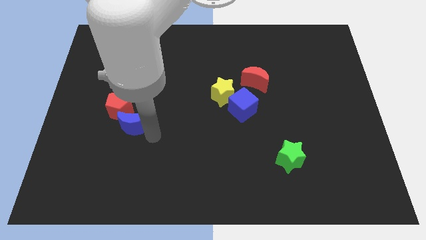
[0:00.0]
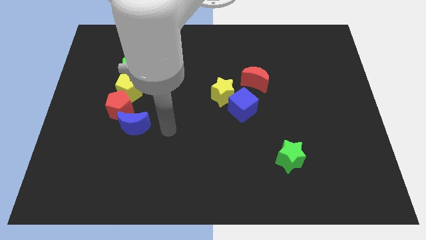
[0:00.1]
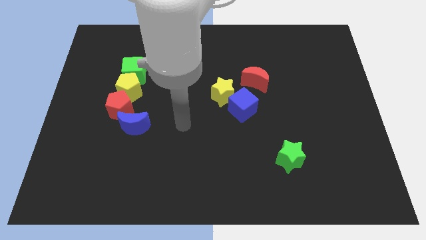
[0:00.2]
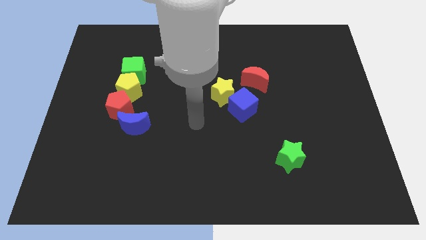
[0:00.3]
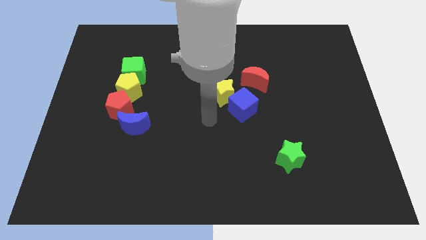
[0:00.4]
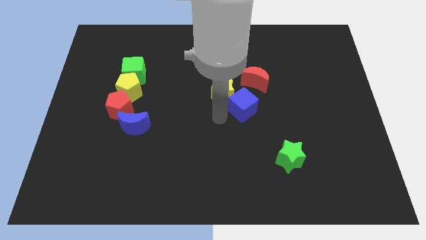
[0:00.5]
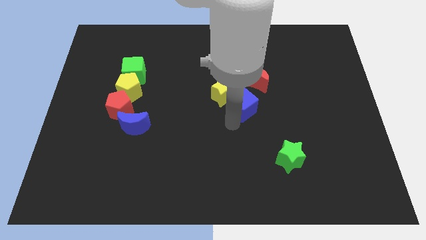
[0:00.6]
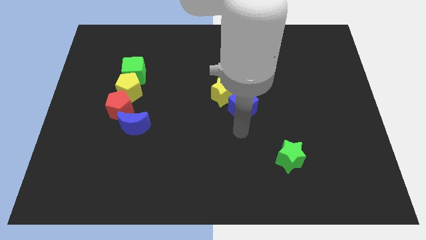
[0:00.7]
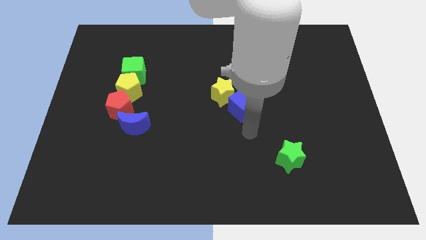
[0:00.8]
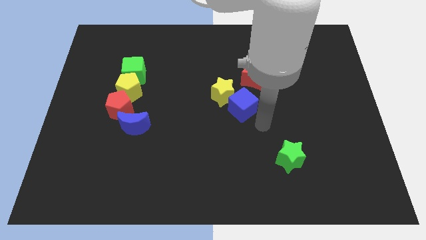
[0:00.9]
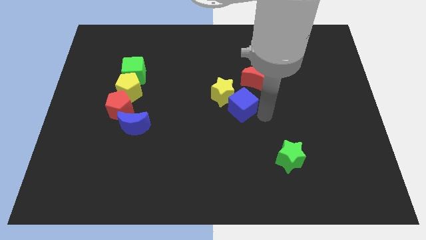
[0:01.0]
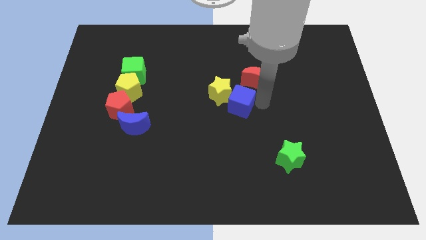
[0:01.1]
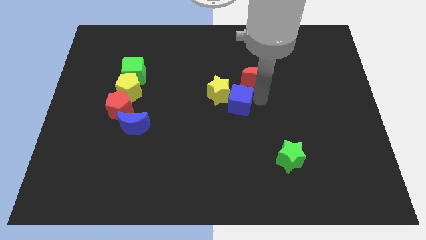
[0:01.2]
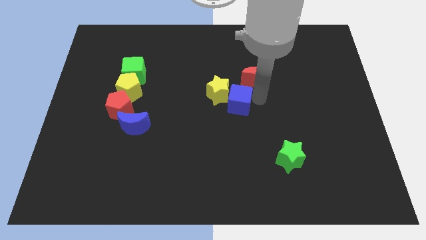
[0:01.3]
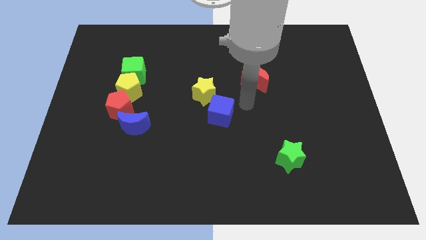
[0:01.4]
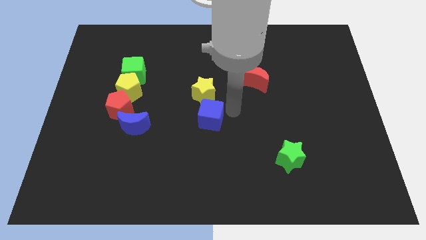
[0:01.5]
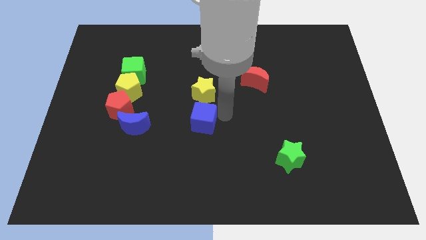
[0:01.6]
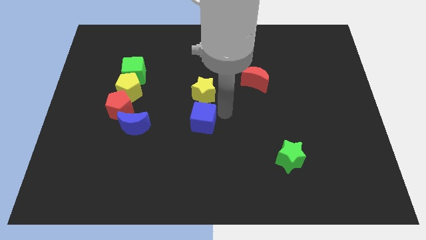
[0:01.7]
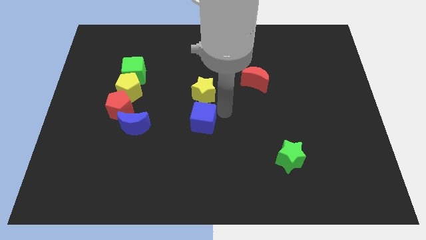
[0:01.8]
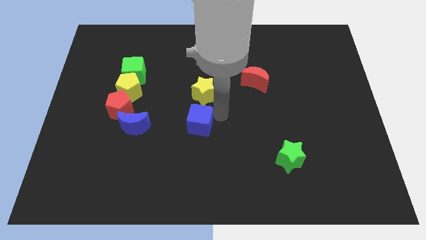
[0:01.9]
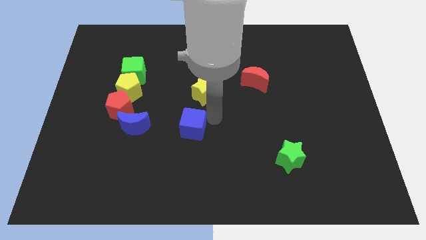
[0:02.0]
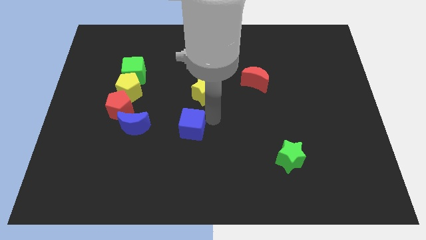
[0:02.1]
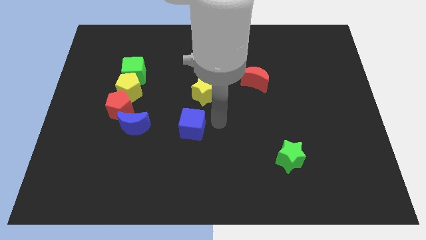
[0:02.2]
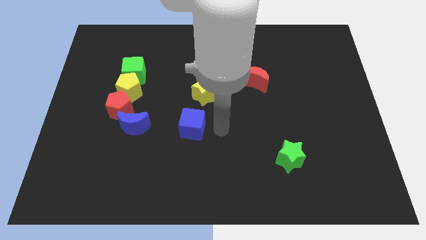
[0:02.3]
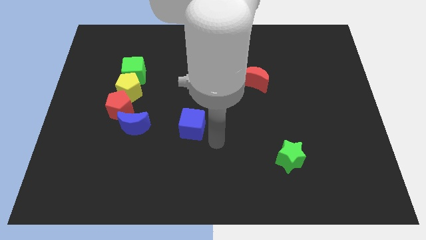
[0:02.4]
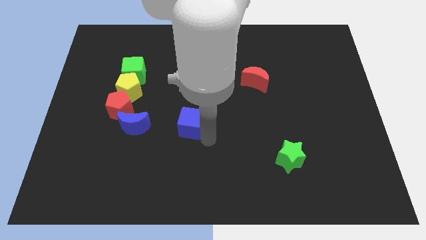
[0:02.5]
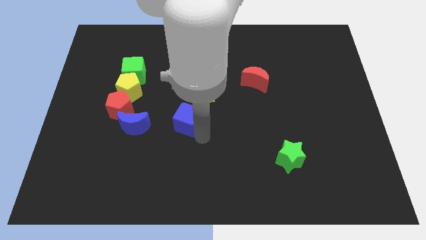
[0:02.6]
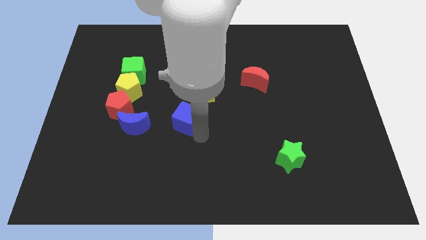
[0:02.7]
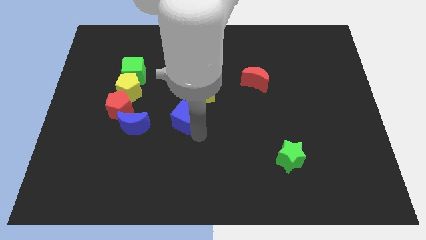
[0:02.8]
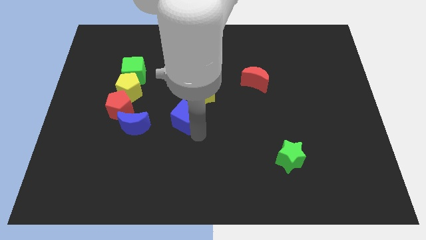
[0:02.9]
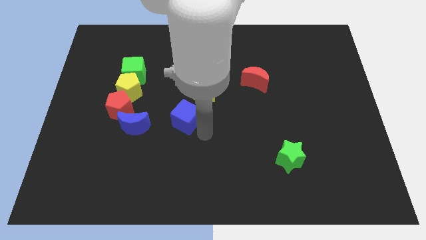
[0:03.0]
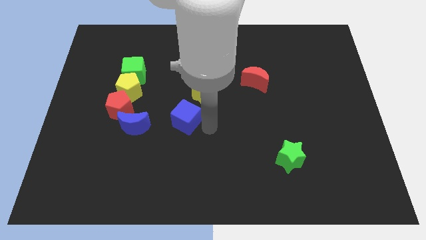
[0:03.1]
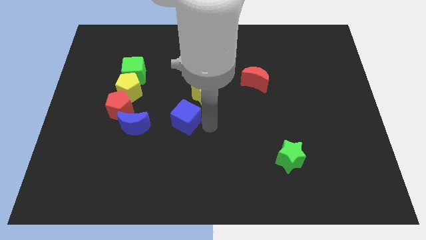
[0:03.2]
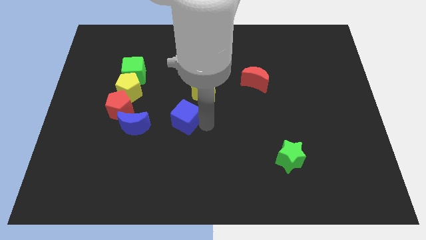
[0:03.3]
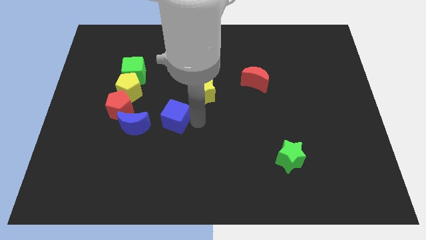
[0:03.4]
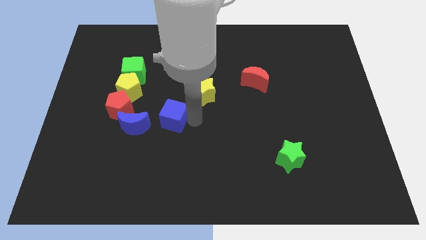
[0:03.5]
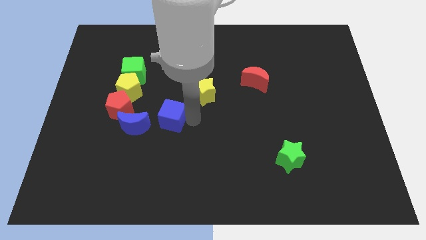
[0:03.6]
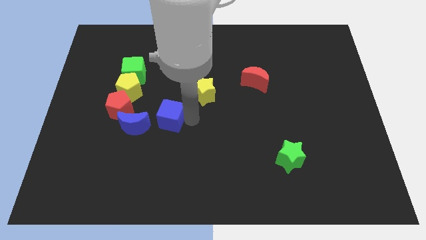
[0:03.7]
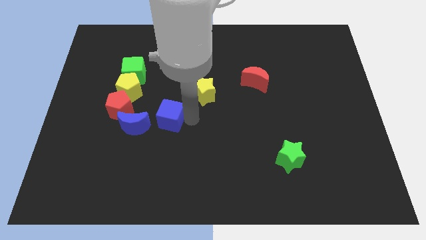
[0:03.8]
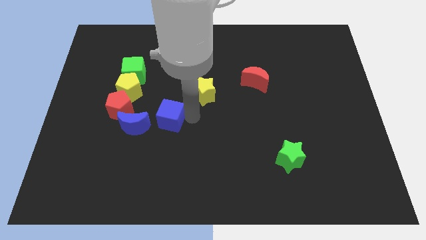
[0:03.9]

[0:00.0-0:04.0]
bring the blue cube near to the right side of the blue crescent

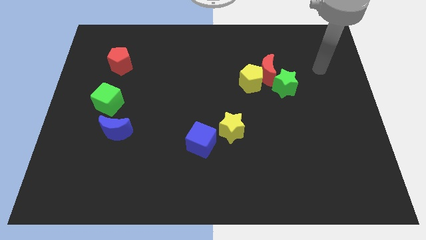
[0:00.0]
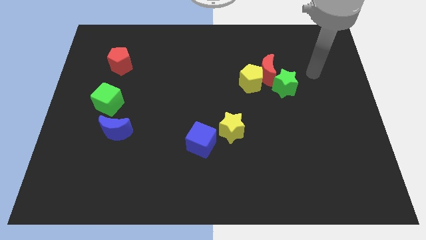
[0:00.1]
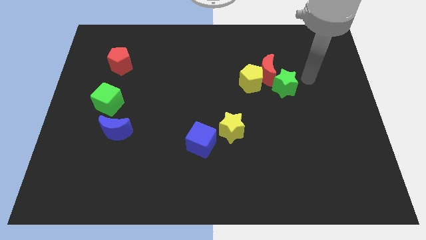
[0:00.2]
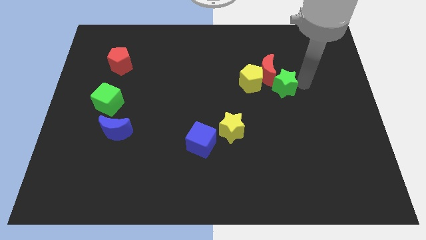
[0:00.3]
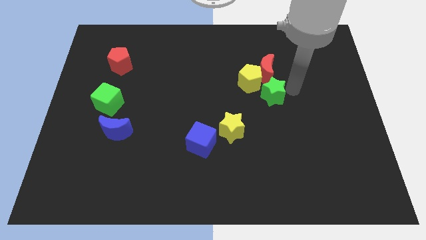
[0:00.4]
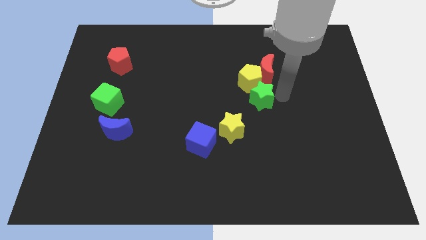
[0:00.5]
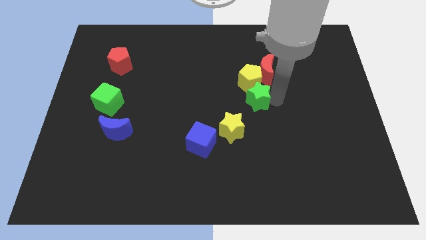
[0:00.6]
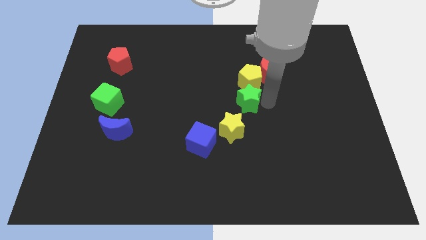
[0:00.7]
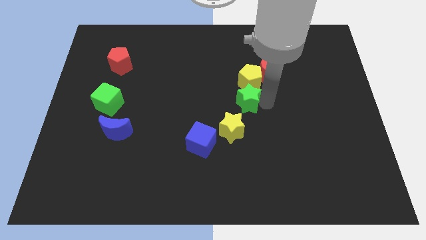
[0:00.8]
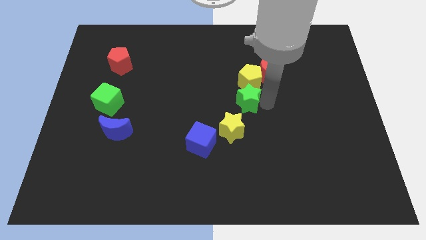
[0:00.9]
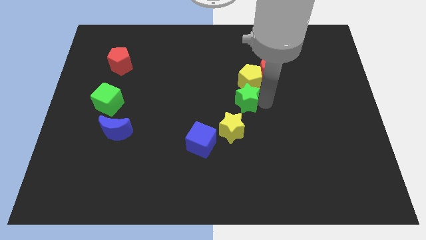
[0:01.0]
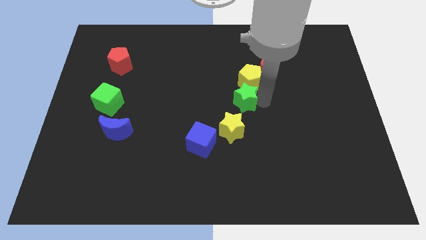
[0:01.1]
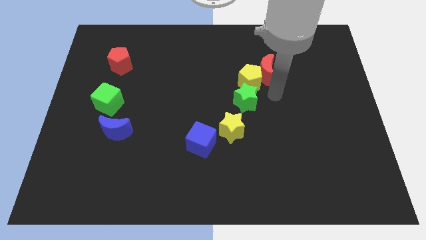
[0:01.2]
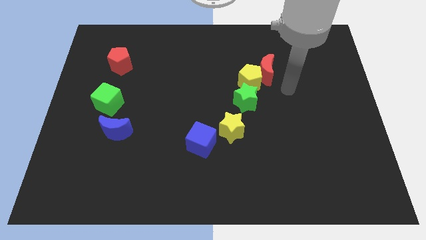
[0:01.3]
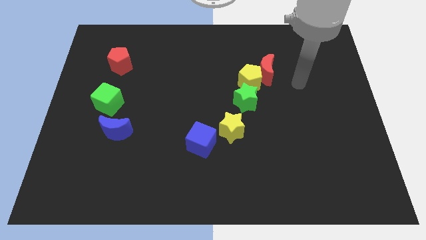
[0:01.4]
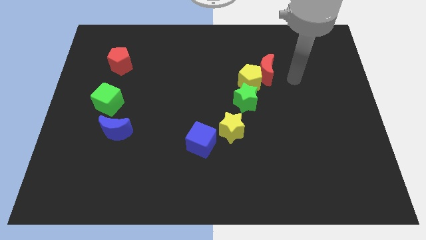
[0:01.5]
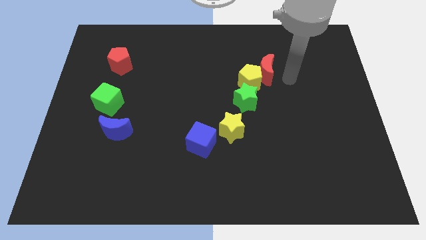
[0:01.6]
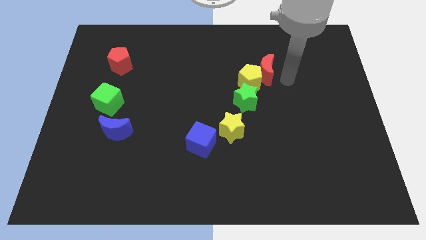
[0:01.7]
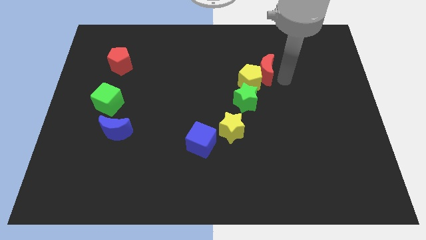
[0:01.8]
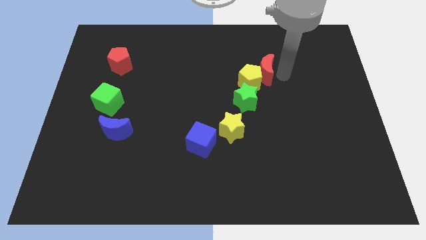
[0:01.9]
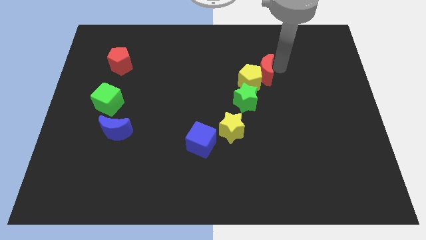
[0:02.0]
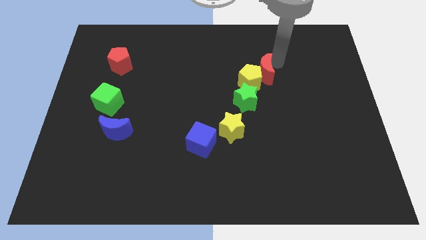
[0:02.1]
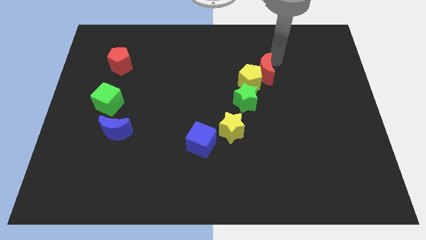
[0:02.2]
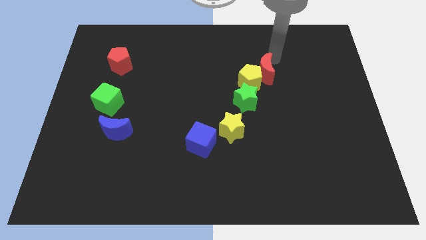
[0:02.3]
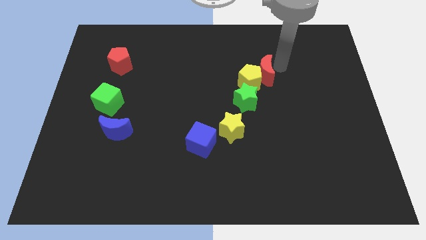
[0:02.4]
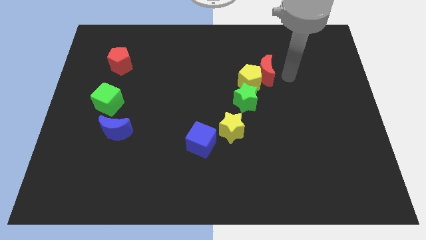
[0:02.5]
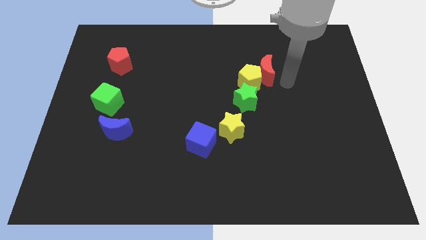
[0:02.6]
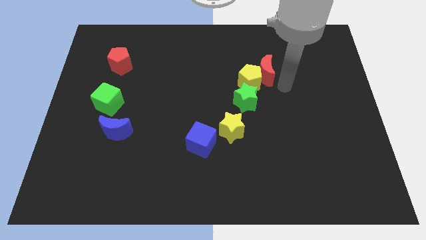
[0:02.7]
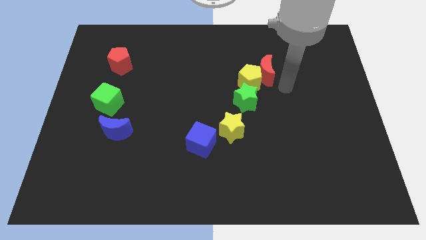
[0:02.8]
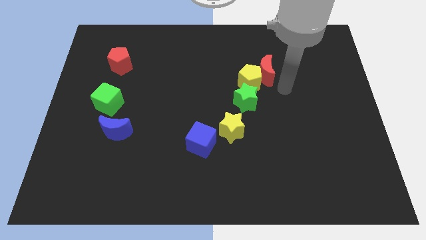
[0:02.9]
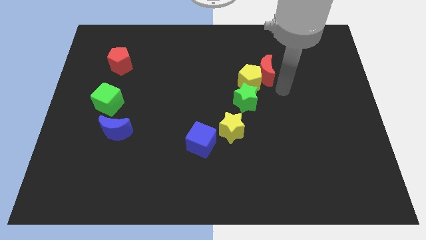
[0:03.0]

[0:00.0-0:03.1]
push the green star to the top right side of the yellow star

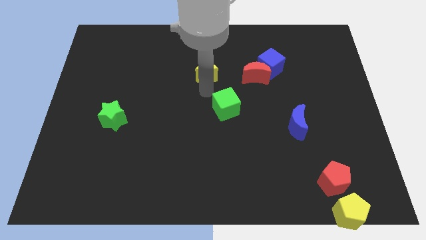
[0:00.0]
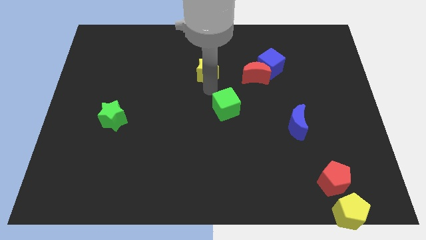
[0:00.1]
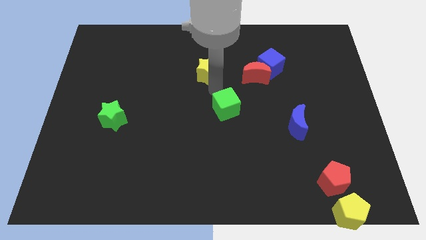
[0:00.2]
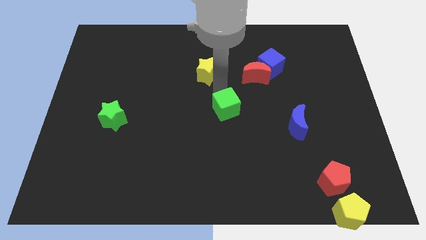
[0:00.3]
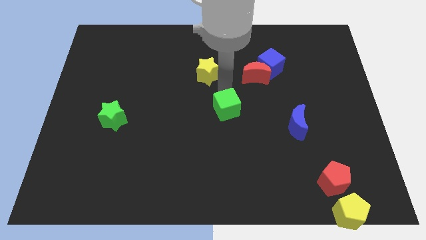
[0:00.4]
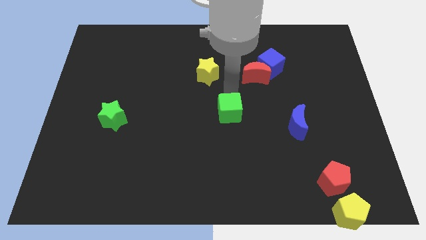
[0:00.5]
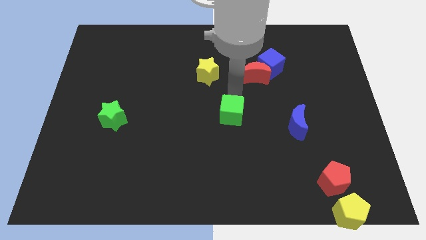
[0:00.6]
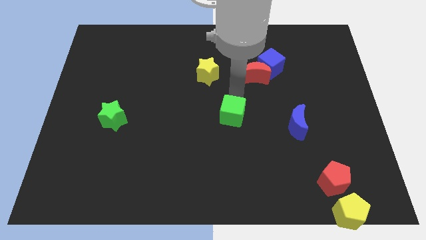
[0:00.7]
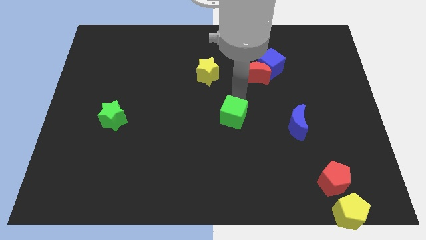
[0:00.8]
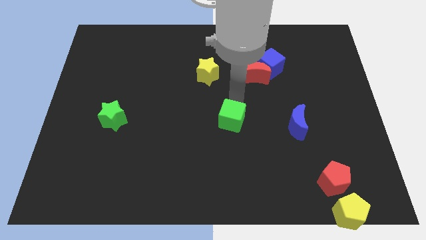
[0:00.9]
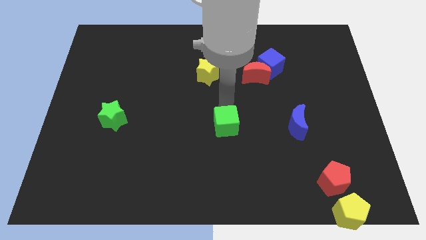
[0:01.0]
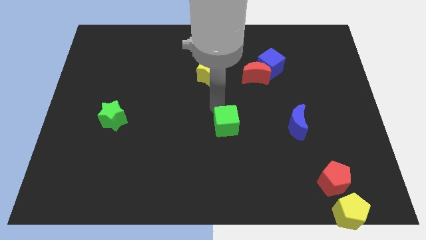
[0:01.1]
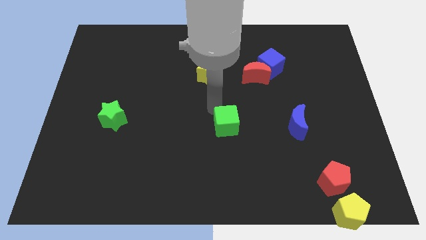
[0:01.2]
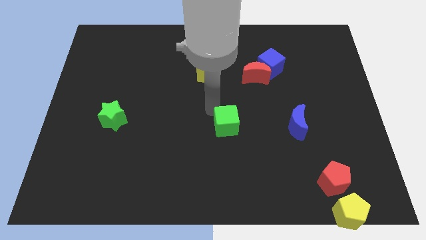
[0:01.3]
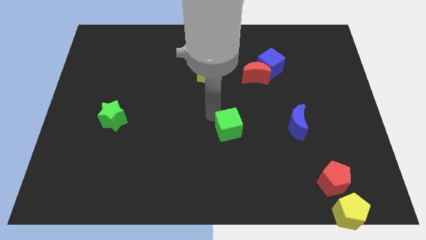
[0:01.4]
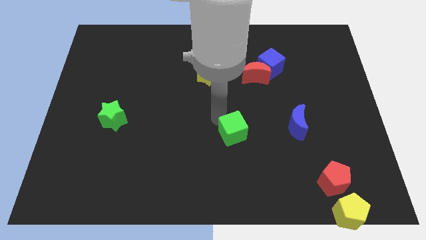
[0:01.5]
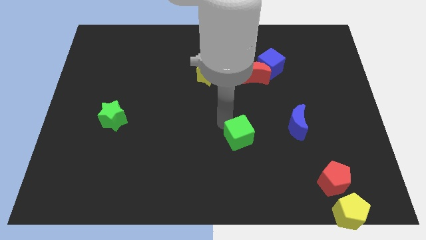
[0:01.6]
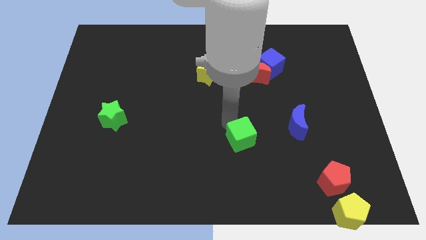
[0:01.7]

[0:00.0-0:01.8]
move the green cube towards the bottom side

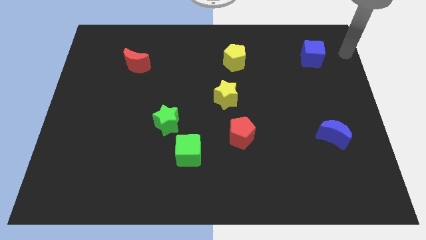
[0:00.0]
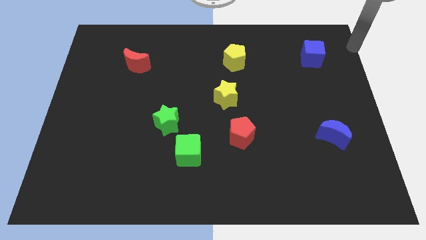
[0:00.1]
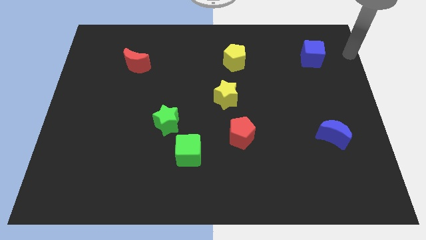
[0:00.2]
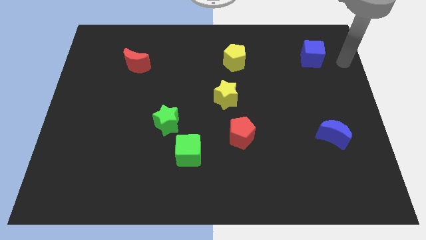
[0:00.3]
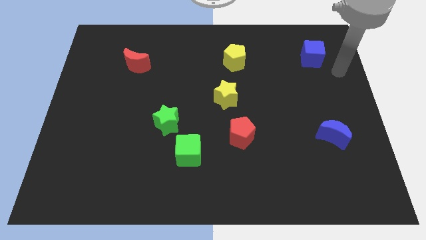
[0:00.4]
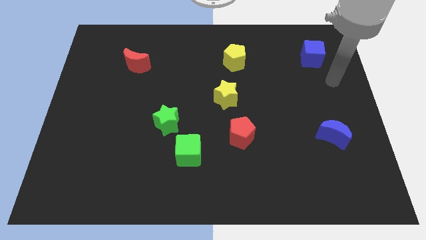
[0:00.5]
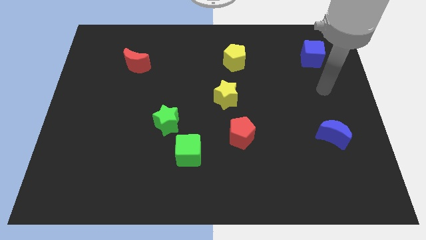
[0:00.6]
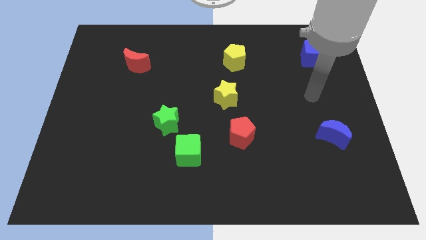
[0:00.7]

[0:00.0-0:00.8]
place arm in between blue blocks
